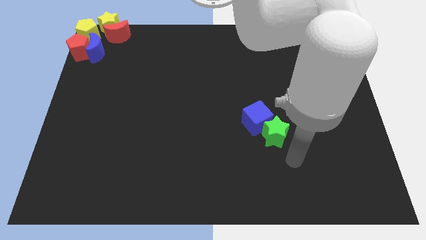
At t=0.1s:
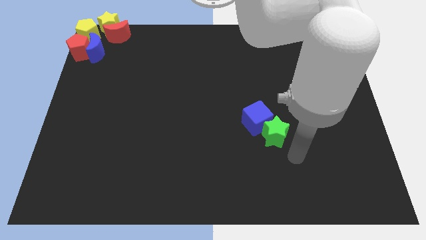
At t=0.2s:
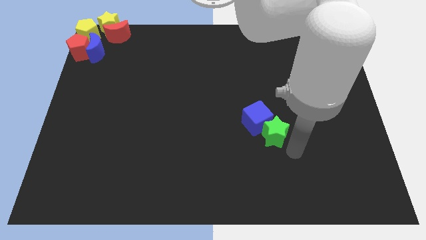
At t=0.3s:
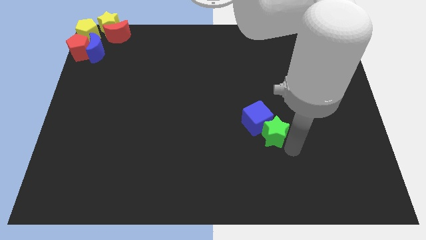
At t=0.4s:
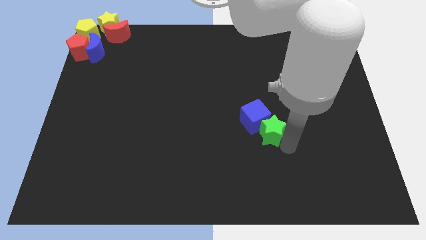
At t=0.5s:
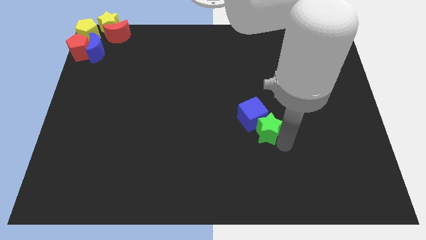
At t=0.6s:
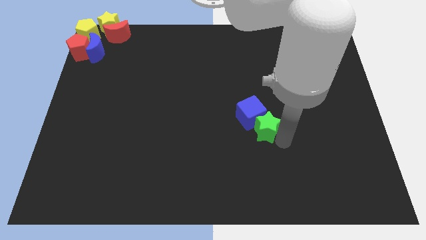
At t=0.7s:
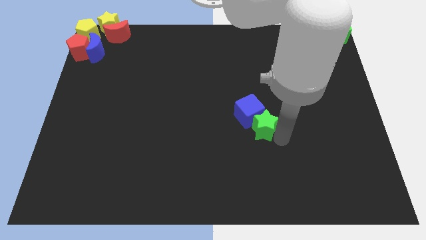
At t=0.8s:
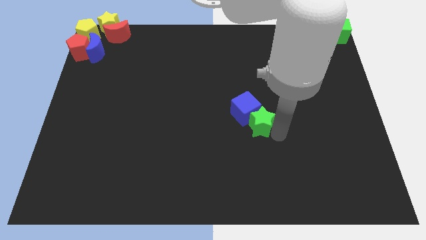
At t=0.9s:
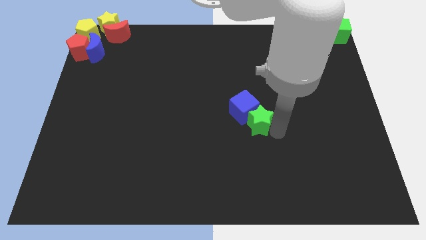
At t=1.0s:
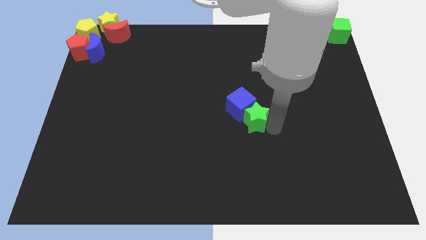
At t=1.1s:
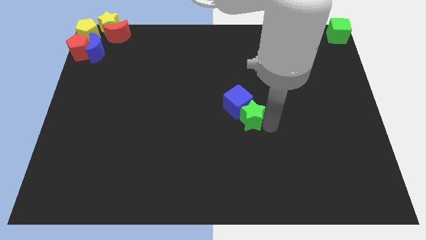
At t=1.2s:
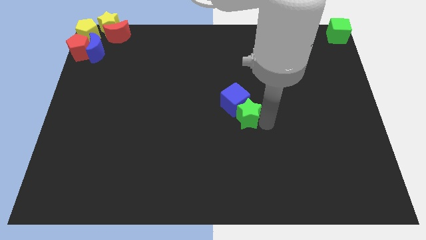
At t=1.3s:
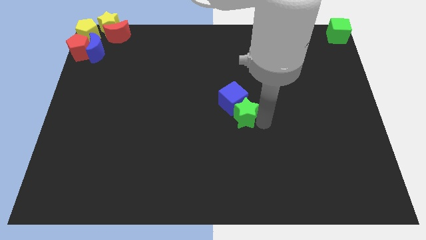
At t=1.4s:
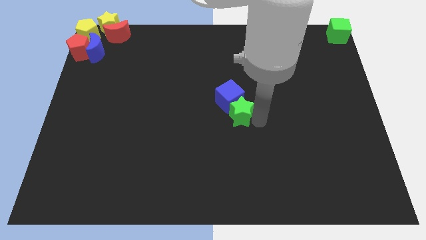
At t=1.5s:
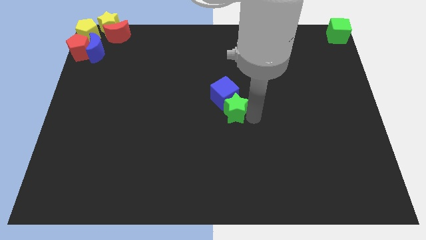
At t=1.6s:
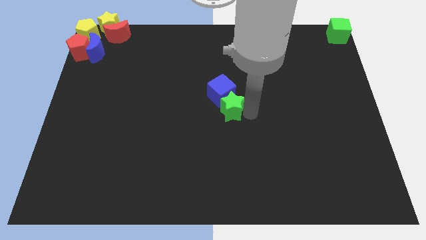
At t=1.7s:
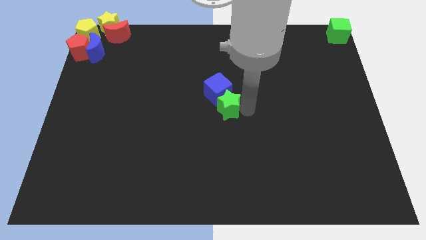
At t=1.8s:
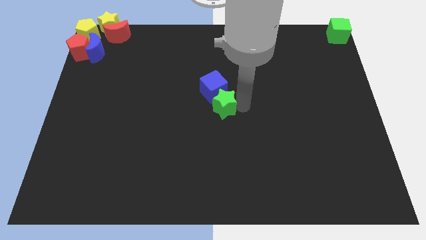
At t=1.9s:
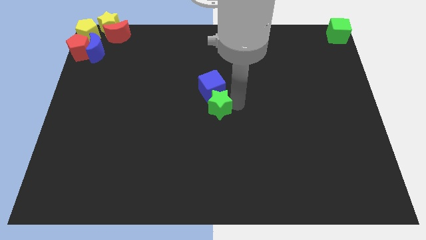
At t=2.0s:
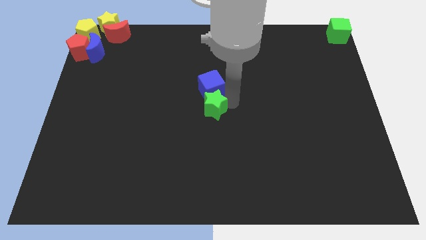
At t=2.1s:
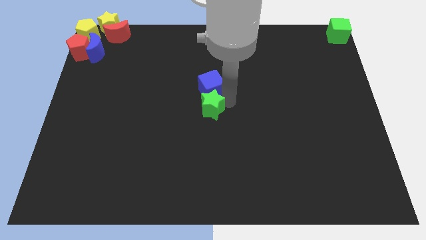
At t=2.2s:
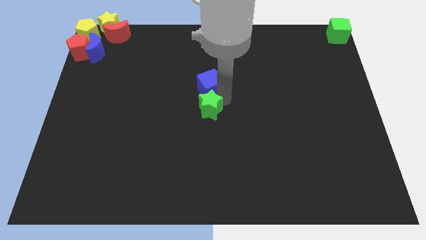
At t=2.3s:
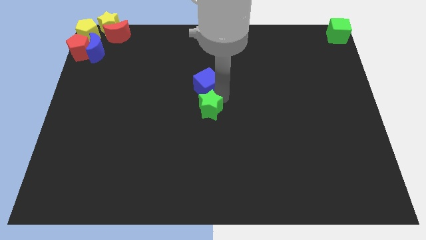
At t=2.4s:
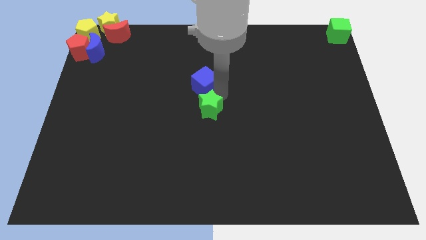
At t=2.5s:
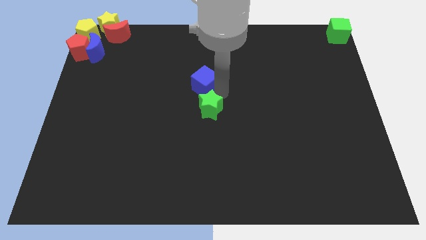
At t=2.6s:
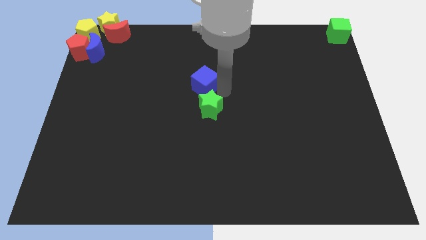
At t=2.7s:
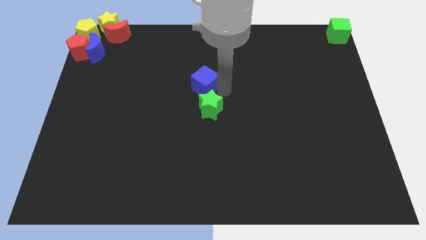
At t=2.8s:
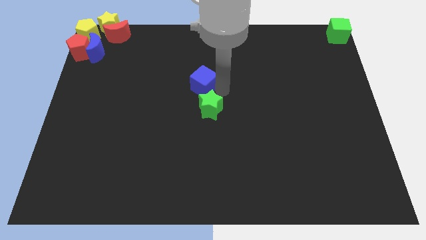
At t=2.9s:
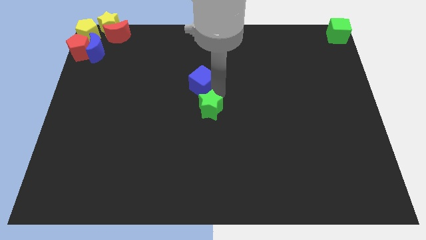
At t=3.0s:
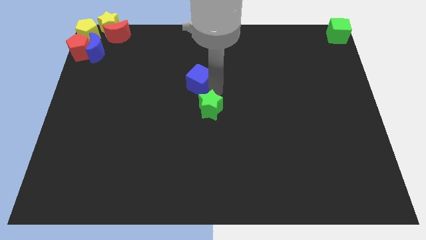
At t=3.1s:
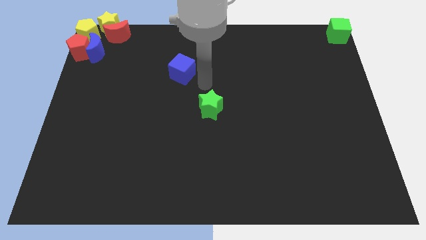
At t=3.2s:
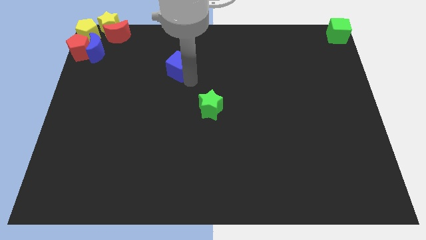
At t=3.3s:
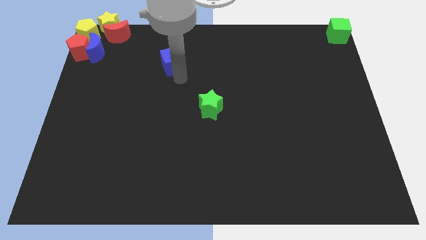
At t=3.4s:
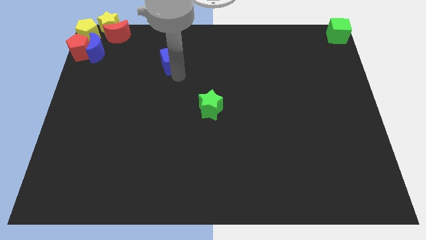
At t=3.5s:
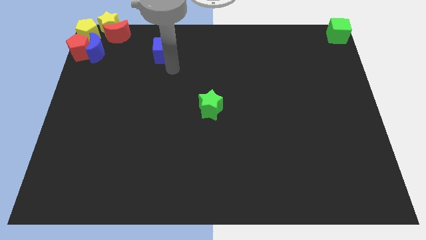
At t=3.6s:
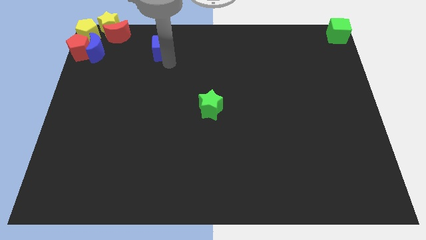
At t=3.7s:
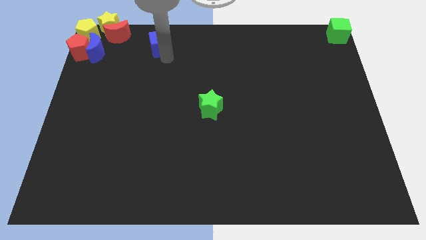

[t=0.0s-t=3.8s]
separate the blue cube from the green star

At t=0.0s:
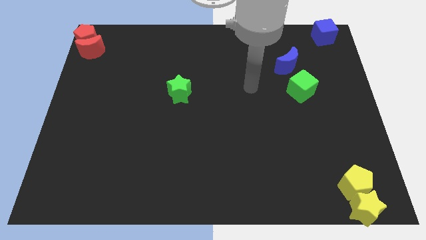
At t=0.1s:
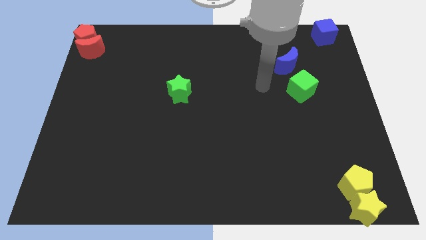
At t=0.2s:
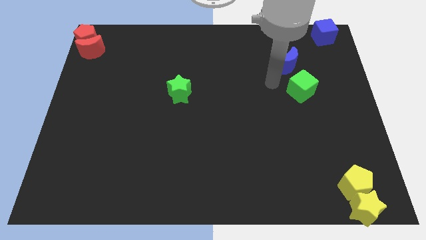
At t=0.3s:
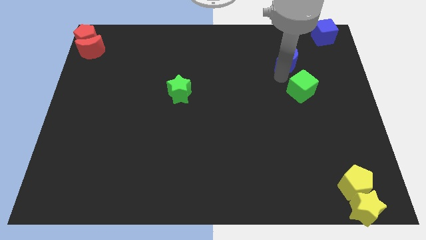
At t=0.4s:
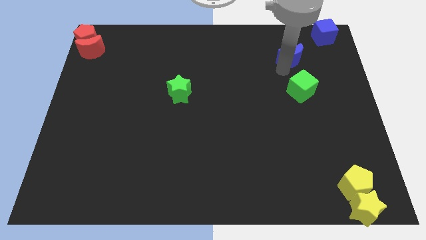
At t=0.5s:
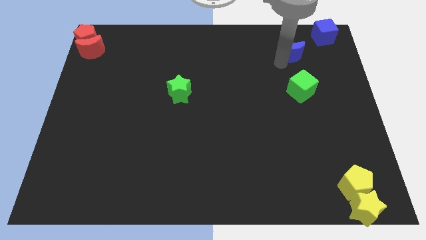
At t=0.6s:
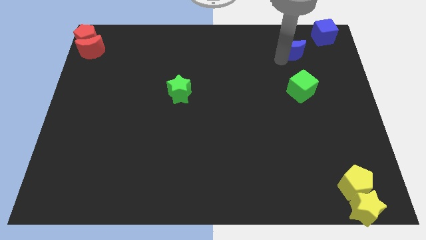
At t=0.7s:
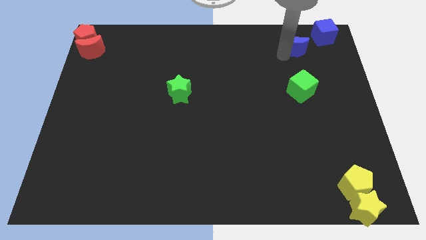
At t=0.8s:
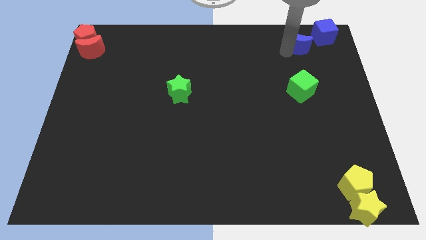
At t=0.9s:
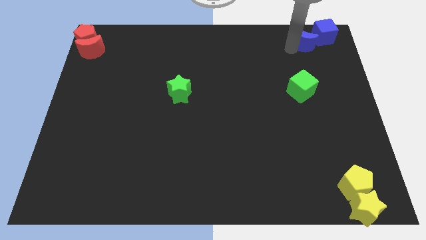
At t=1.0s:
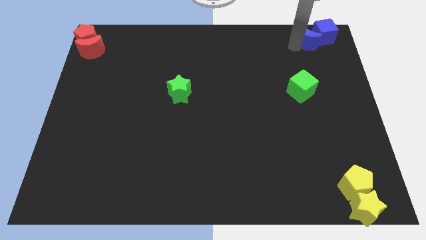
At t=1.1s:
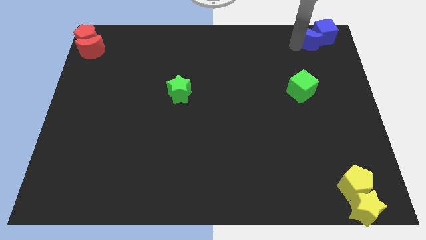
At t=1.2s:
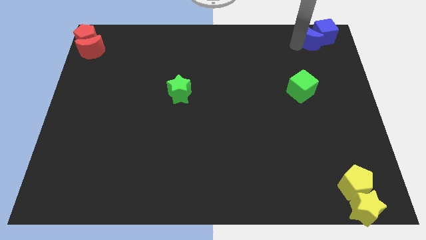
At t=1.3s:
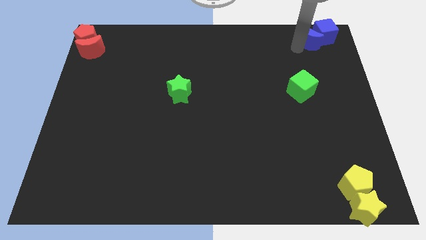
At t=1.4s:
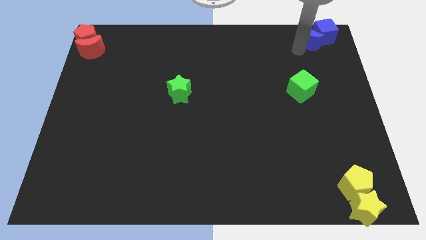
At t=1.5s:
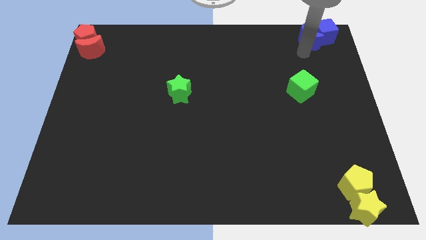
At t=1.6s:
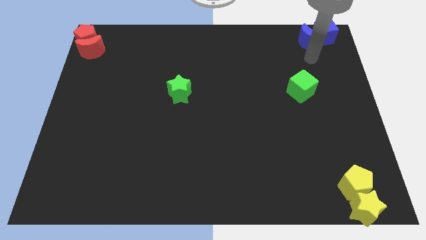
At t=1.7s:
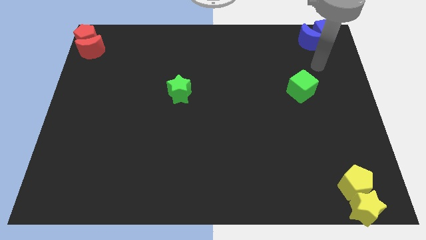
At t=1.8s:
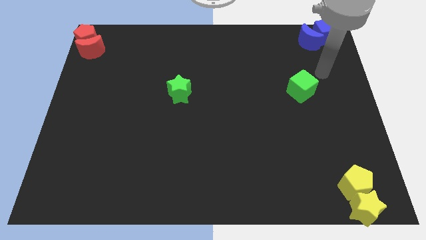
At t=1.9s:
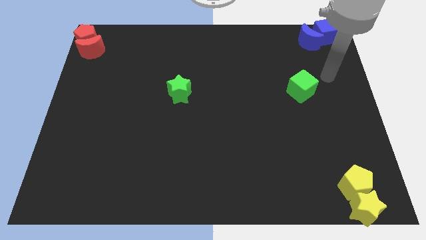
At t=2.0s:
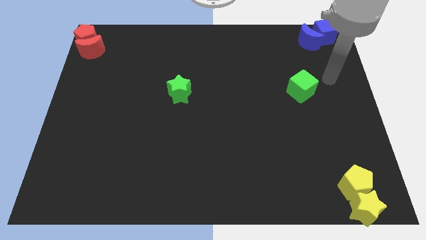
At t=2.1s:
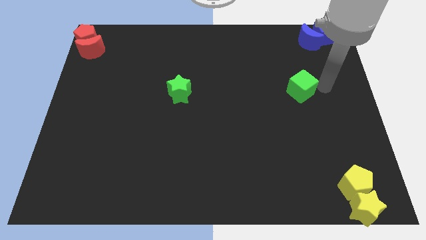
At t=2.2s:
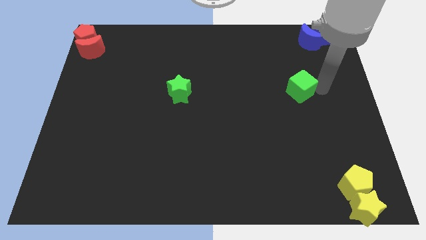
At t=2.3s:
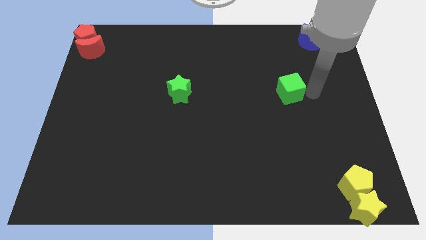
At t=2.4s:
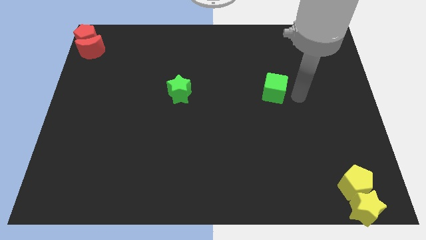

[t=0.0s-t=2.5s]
move the blue crescent to the left side of the blue cube

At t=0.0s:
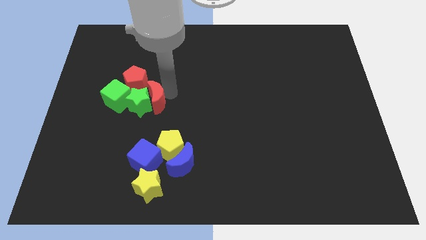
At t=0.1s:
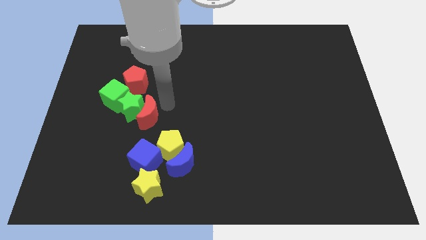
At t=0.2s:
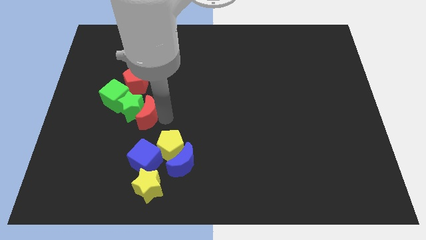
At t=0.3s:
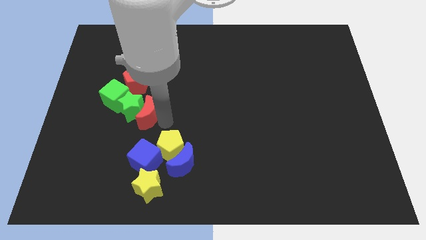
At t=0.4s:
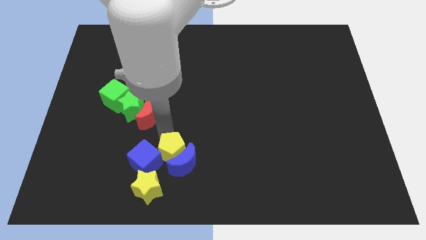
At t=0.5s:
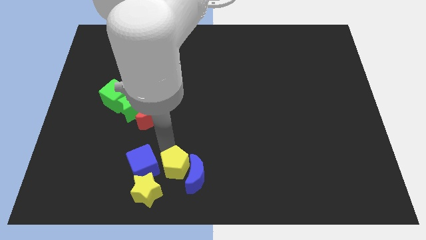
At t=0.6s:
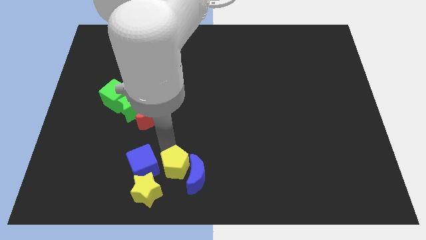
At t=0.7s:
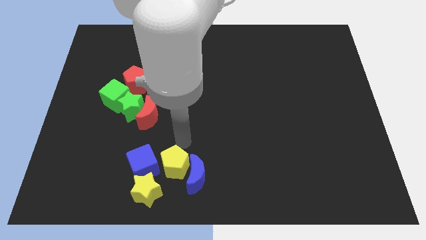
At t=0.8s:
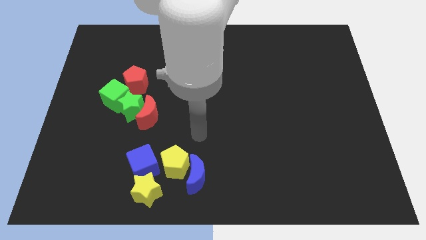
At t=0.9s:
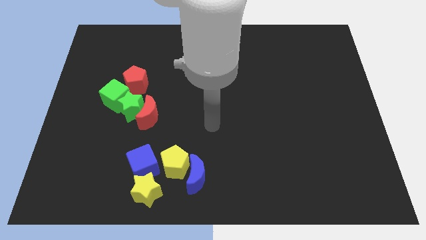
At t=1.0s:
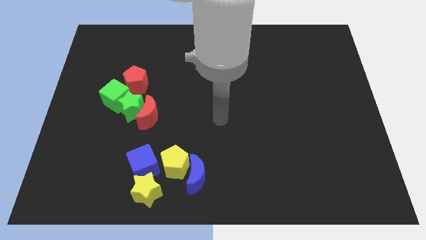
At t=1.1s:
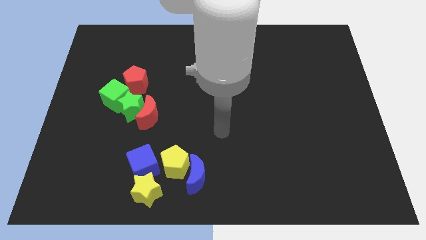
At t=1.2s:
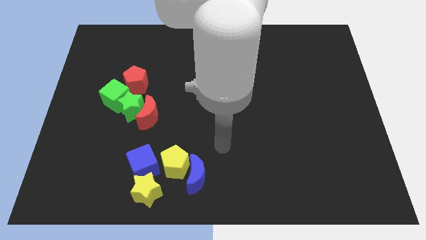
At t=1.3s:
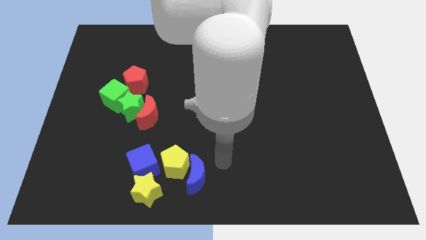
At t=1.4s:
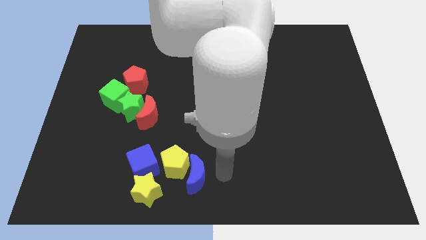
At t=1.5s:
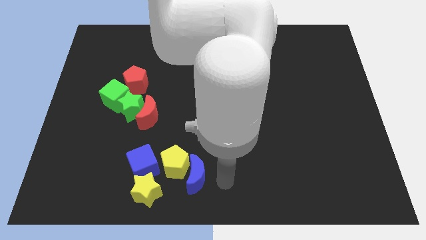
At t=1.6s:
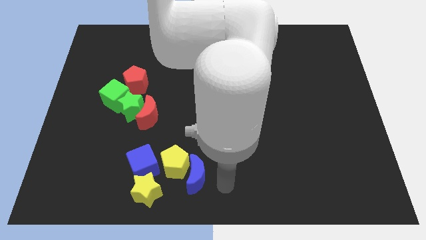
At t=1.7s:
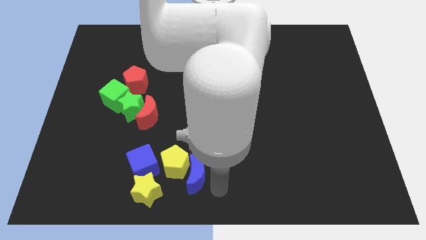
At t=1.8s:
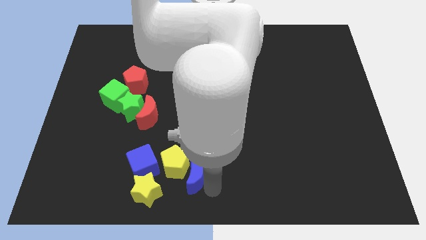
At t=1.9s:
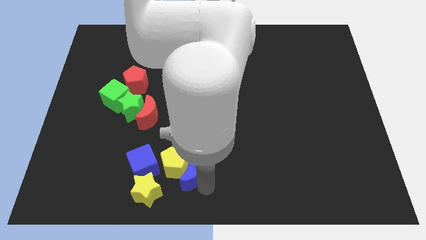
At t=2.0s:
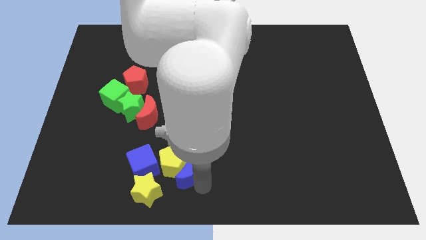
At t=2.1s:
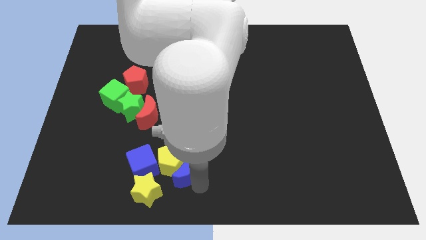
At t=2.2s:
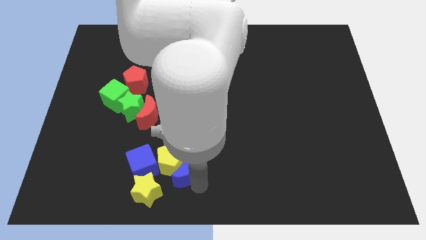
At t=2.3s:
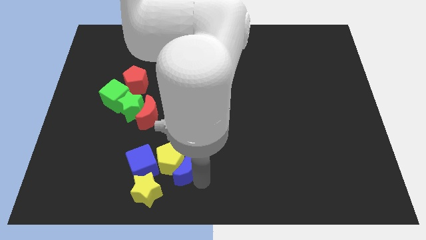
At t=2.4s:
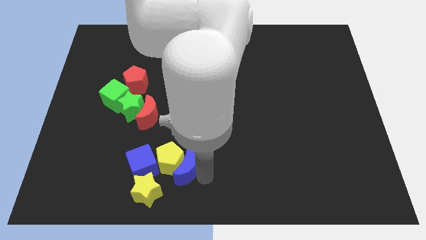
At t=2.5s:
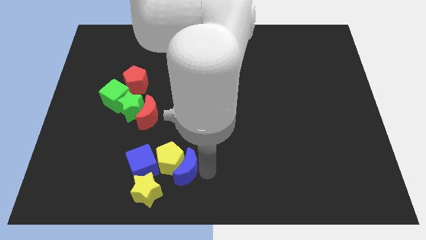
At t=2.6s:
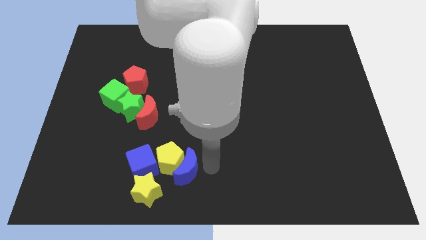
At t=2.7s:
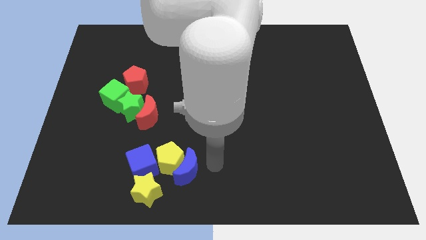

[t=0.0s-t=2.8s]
adjust the group of blue and yellow blocks together at the bottom left side of the board
